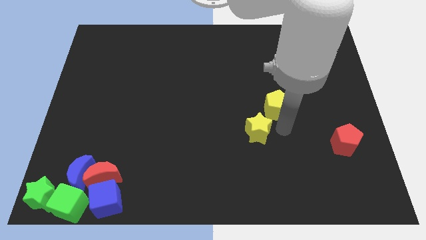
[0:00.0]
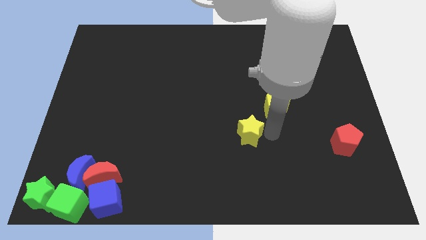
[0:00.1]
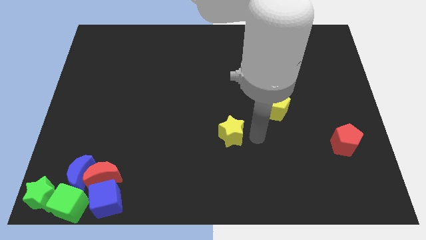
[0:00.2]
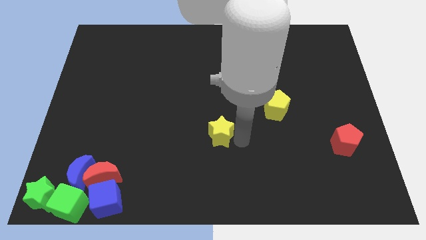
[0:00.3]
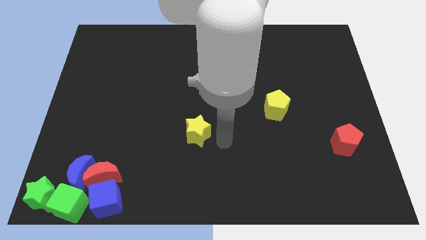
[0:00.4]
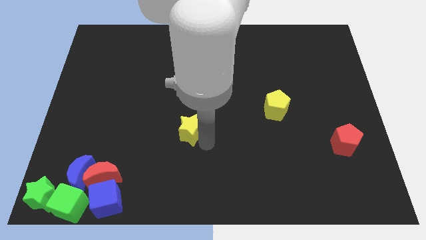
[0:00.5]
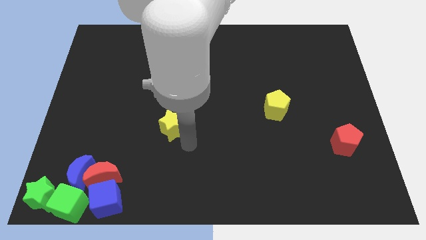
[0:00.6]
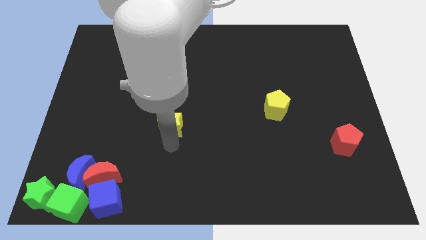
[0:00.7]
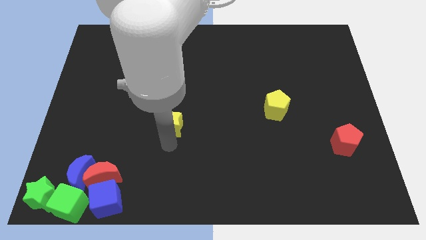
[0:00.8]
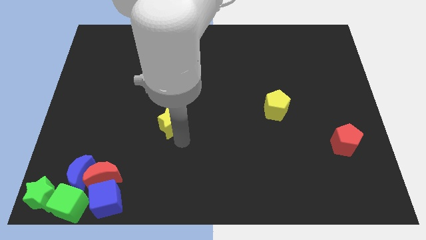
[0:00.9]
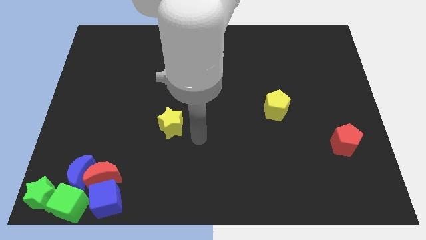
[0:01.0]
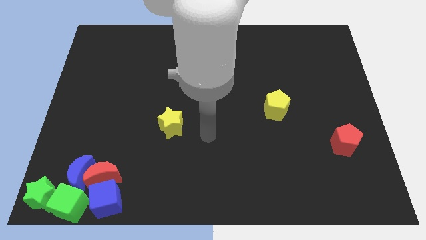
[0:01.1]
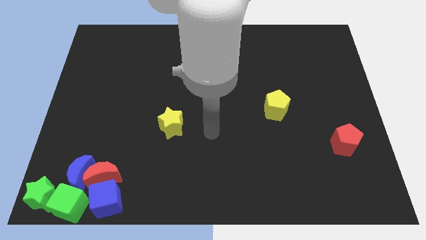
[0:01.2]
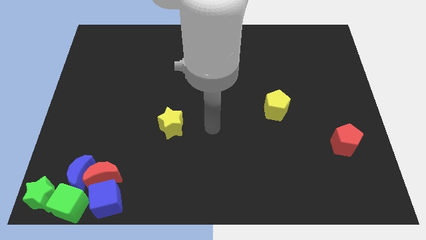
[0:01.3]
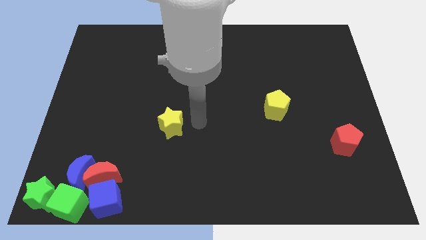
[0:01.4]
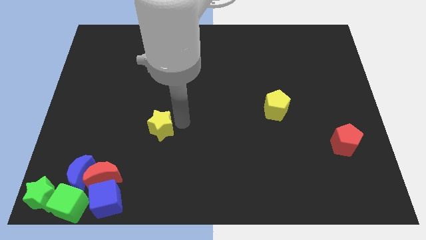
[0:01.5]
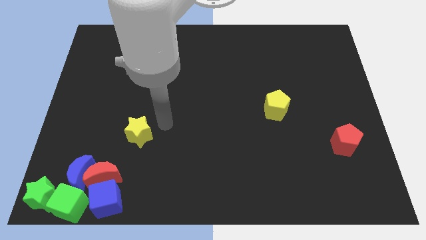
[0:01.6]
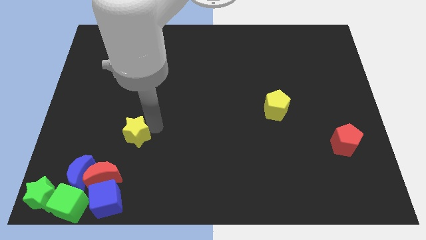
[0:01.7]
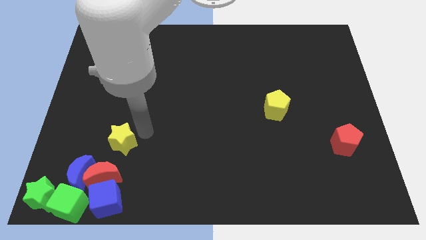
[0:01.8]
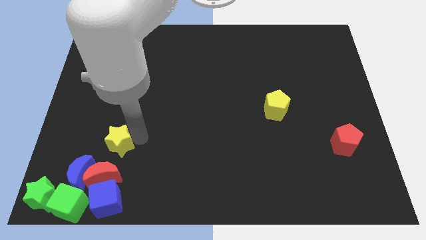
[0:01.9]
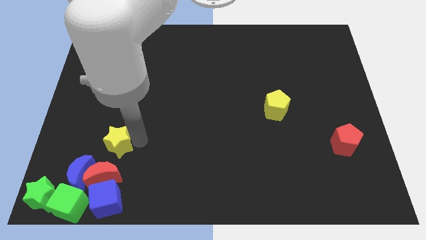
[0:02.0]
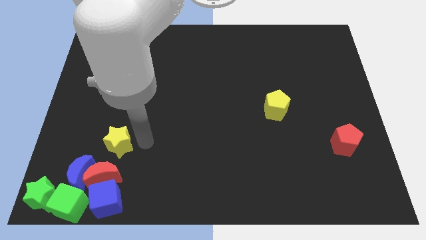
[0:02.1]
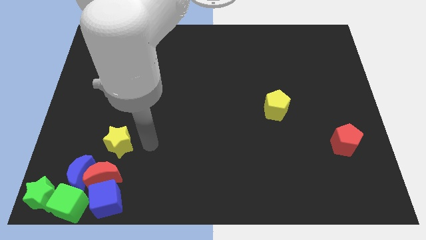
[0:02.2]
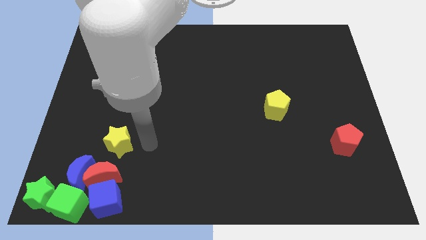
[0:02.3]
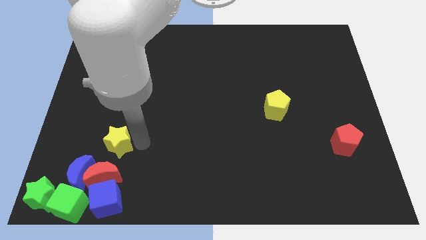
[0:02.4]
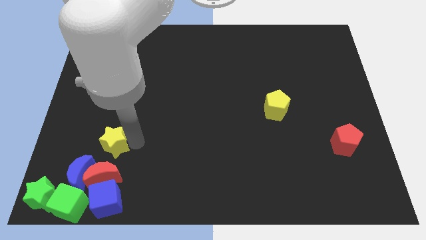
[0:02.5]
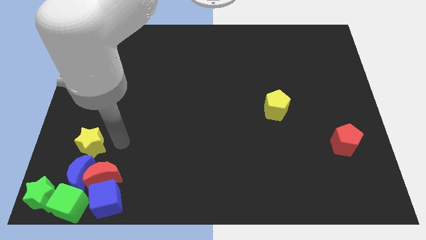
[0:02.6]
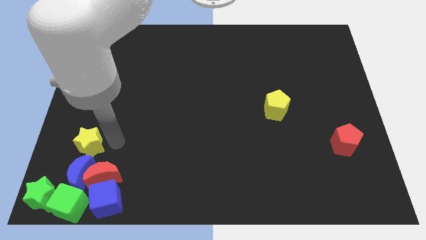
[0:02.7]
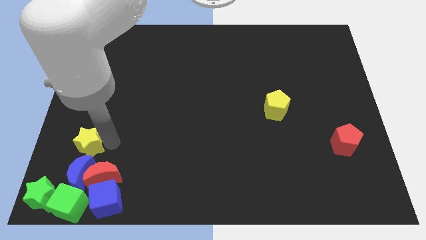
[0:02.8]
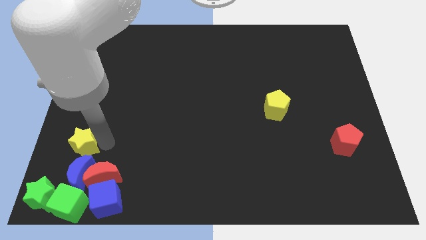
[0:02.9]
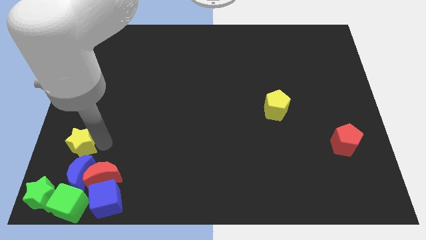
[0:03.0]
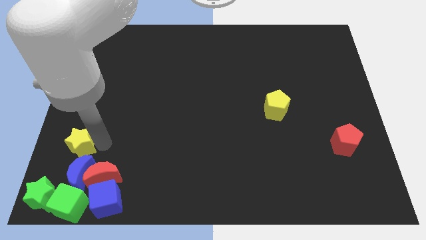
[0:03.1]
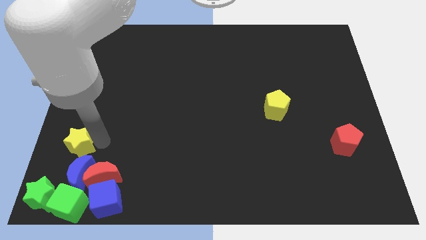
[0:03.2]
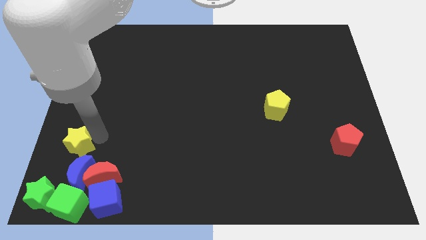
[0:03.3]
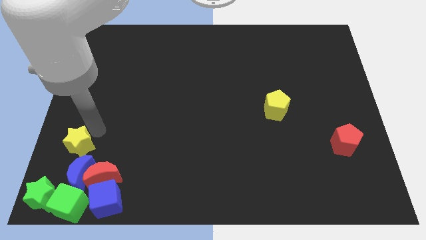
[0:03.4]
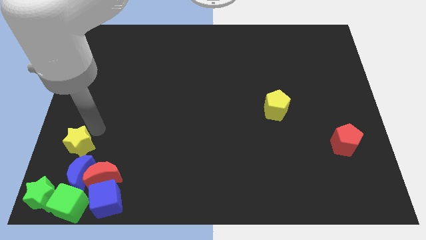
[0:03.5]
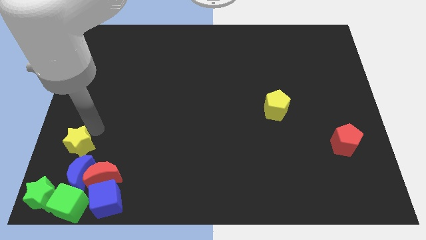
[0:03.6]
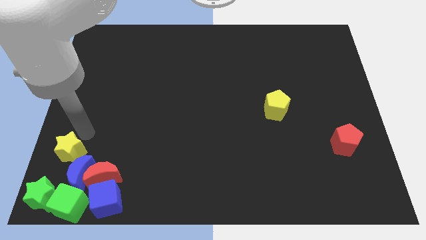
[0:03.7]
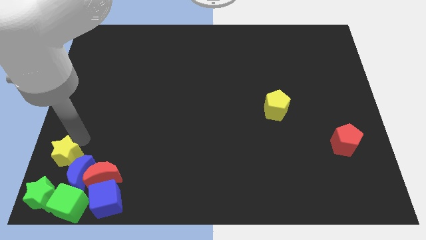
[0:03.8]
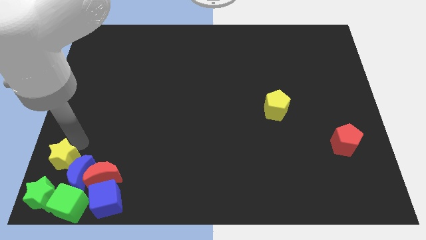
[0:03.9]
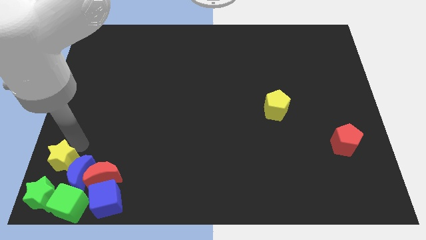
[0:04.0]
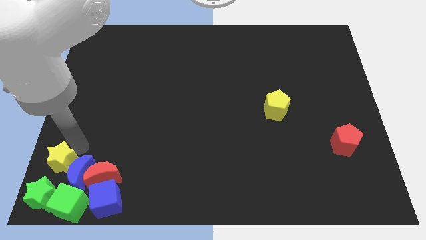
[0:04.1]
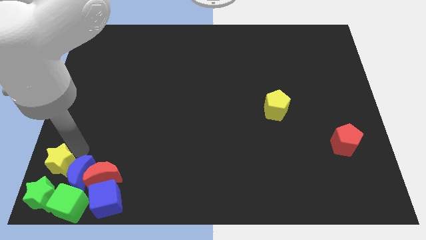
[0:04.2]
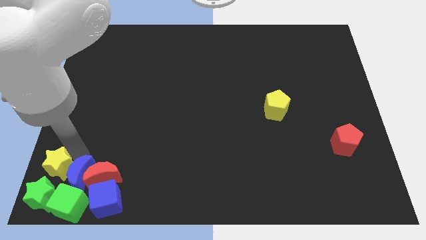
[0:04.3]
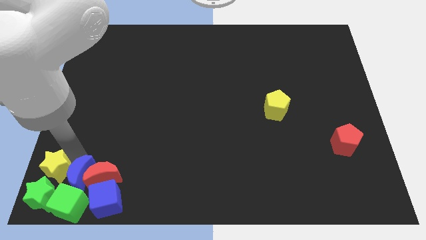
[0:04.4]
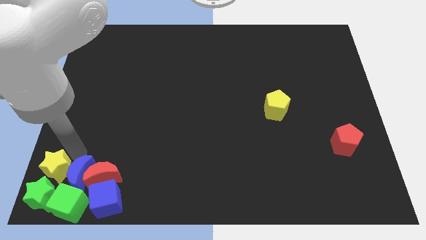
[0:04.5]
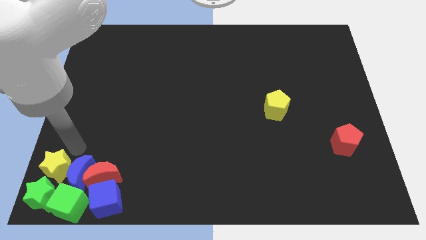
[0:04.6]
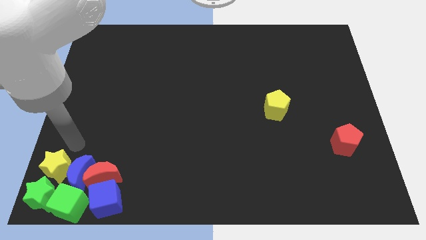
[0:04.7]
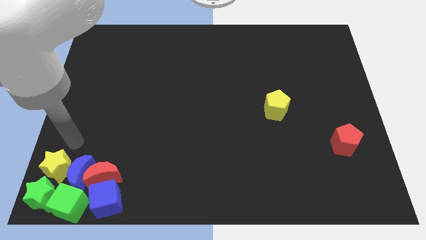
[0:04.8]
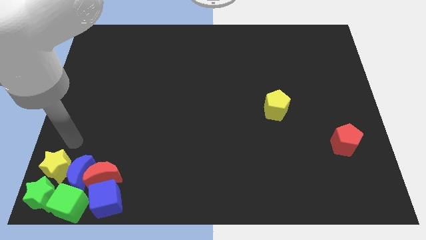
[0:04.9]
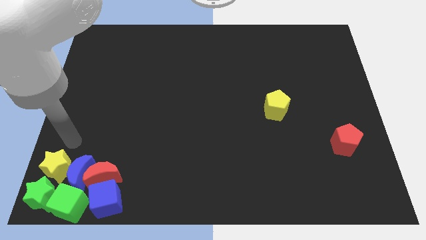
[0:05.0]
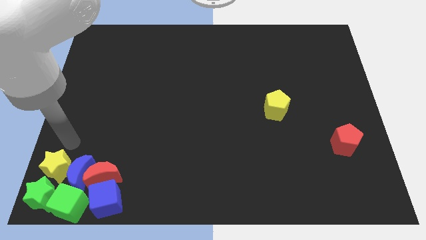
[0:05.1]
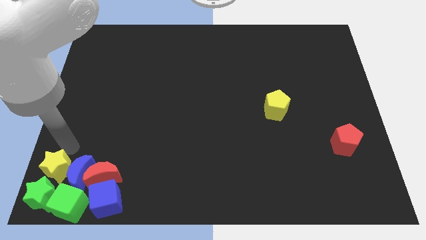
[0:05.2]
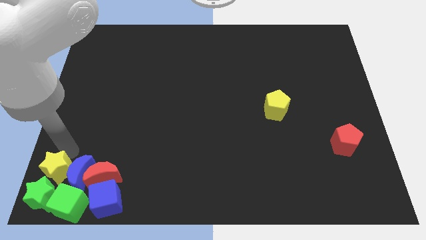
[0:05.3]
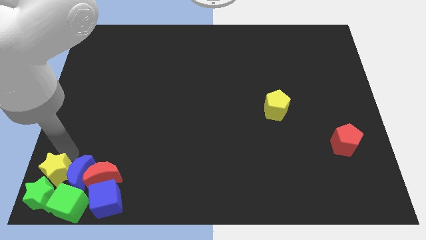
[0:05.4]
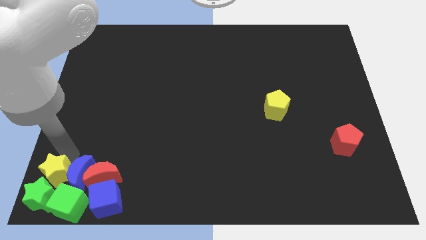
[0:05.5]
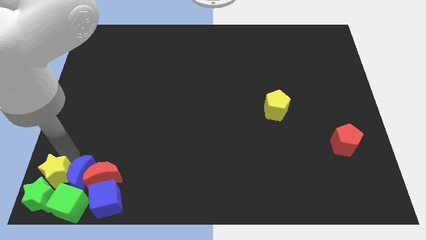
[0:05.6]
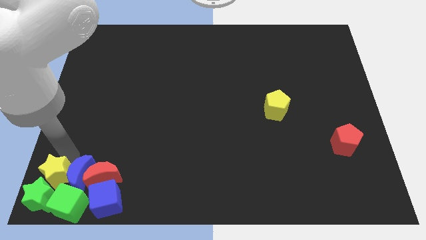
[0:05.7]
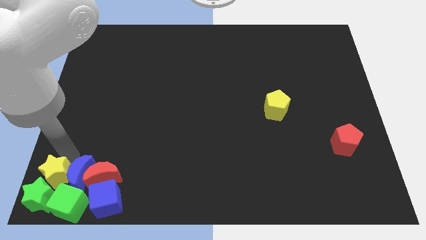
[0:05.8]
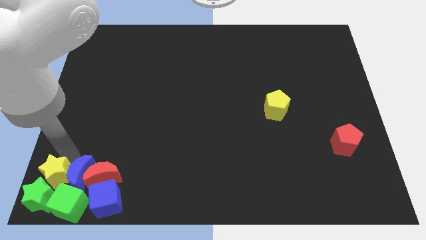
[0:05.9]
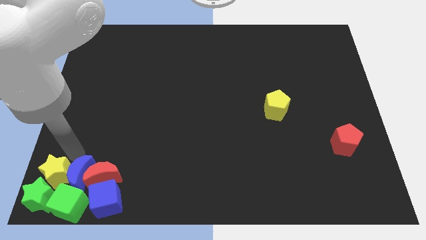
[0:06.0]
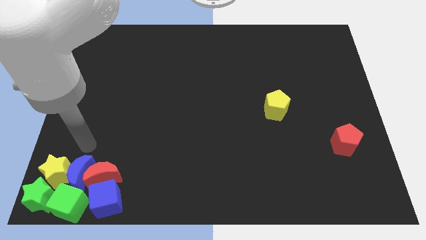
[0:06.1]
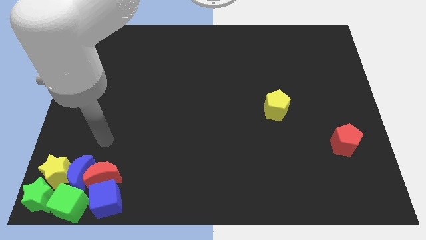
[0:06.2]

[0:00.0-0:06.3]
push the yellow star into the green star

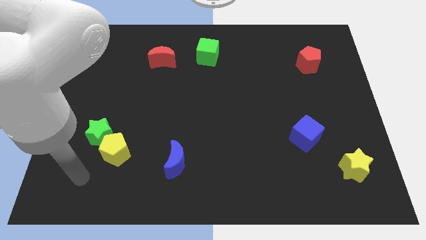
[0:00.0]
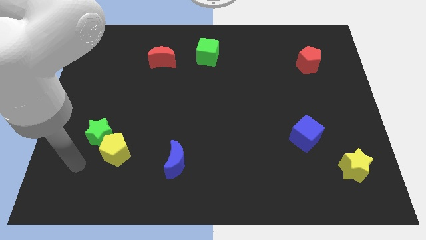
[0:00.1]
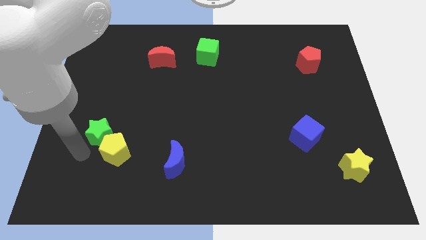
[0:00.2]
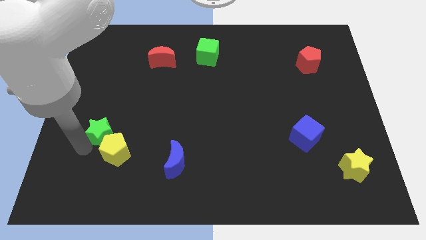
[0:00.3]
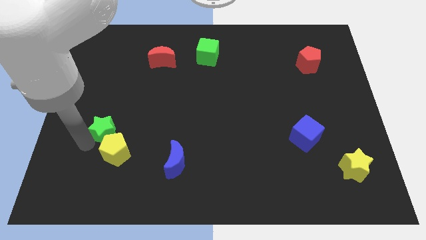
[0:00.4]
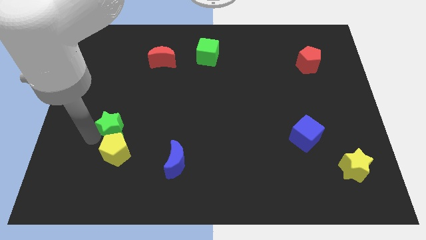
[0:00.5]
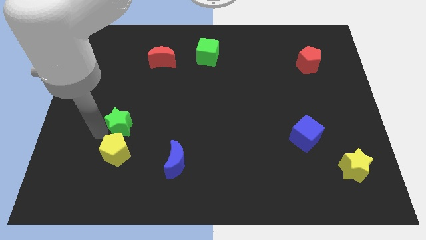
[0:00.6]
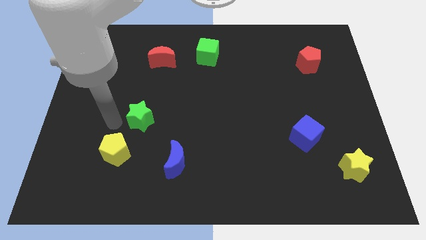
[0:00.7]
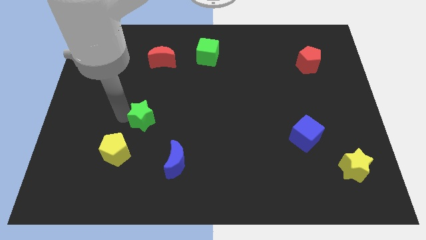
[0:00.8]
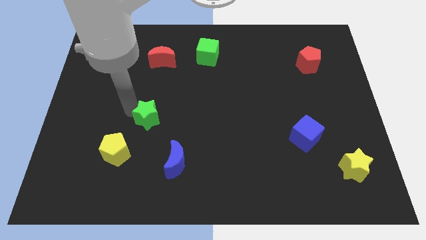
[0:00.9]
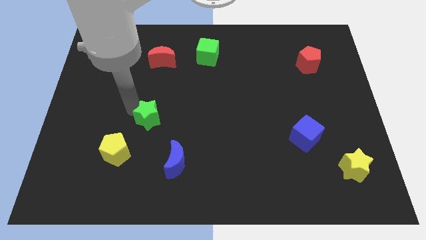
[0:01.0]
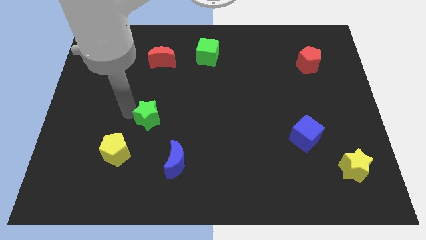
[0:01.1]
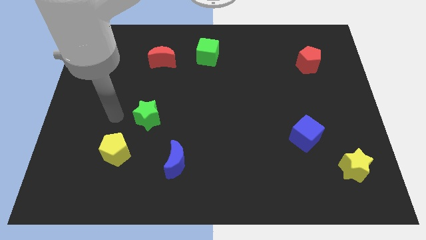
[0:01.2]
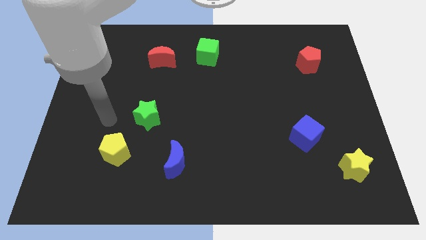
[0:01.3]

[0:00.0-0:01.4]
separate the green star from the yellow pentagon

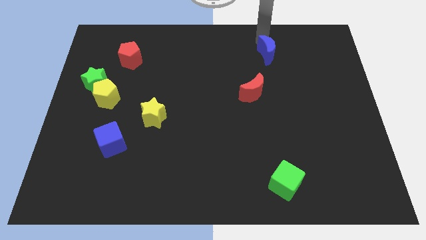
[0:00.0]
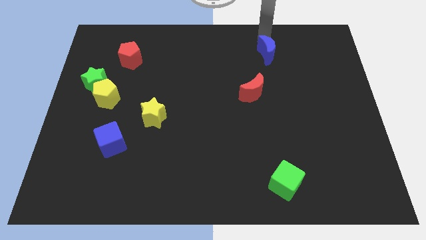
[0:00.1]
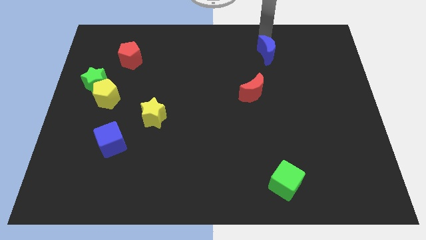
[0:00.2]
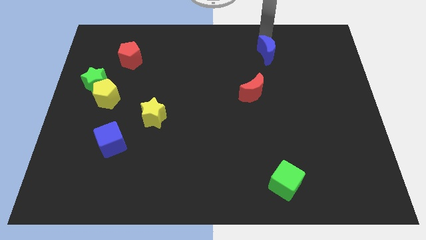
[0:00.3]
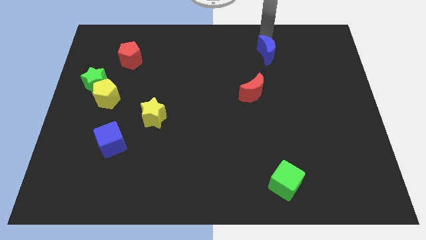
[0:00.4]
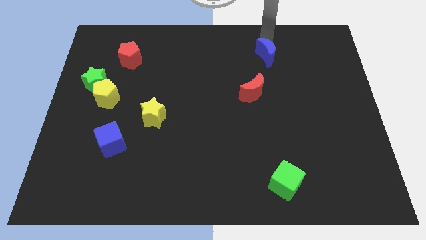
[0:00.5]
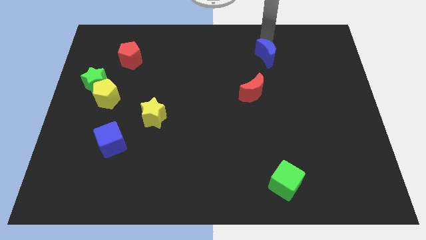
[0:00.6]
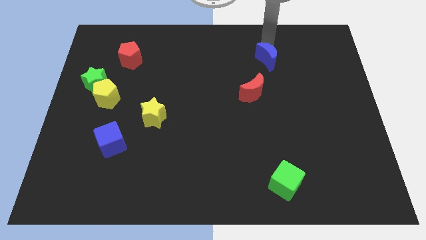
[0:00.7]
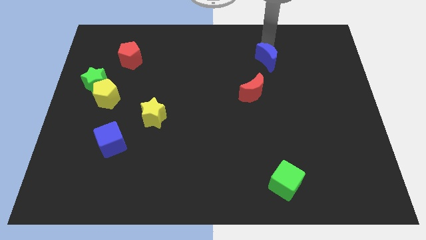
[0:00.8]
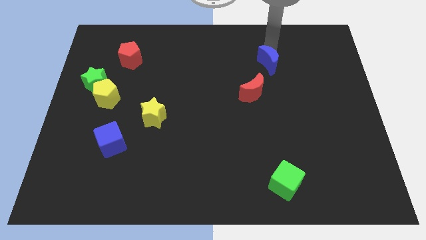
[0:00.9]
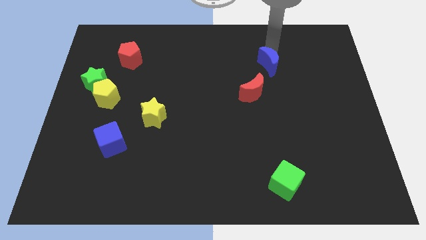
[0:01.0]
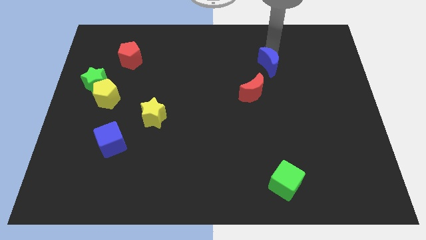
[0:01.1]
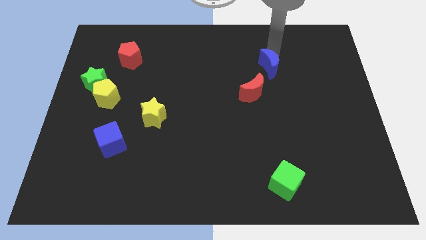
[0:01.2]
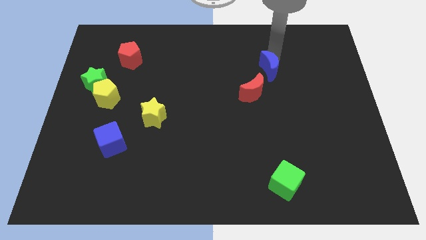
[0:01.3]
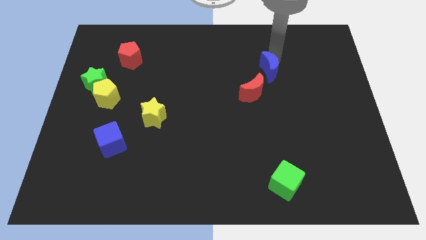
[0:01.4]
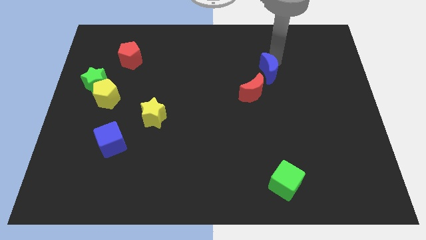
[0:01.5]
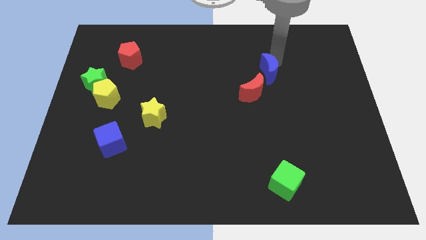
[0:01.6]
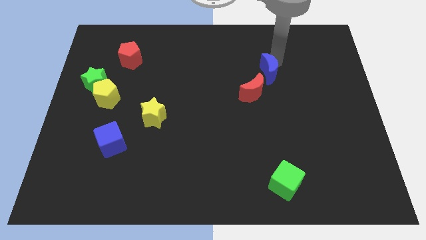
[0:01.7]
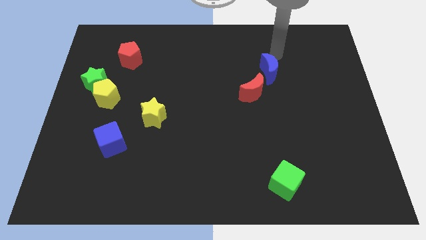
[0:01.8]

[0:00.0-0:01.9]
move the blue crescent close to the red crescent
